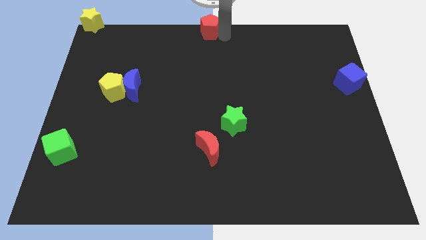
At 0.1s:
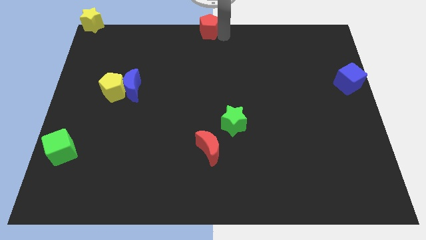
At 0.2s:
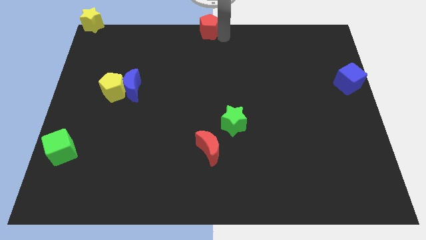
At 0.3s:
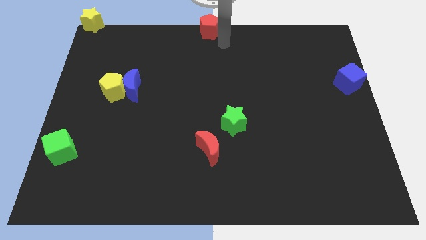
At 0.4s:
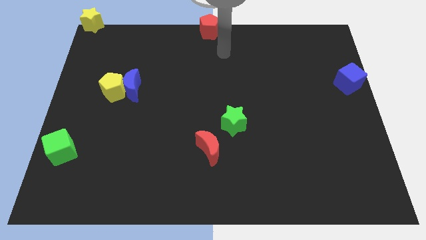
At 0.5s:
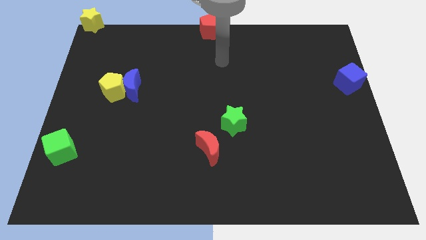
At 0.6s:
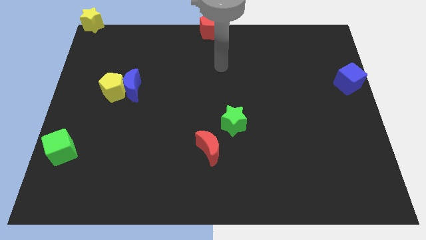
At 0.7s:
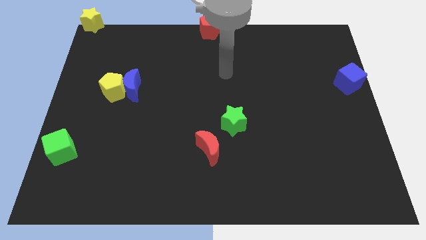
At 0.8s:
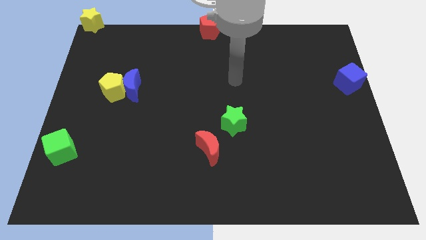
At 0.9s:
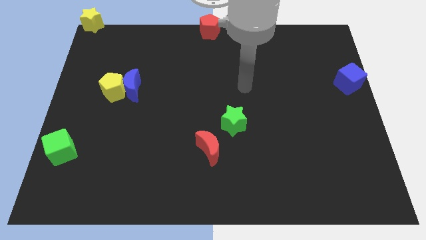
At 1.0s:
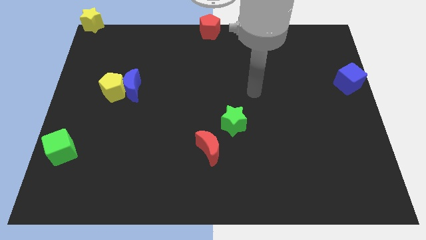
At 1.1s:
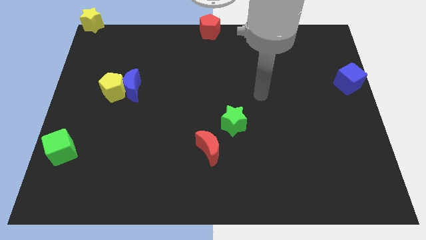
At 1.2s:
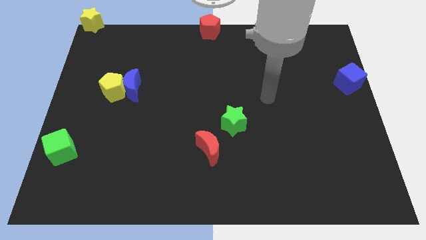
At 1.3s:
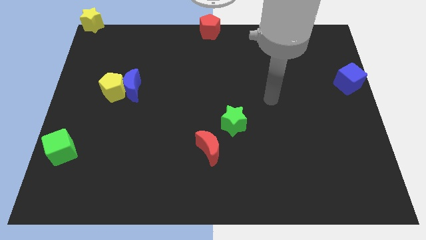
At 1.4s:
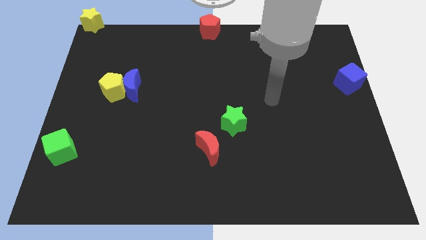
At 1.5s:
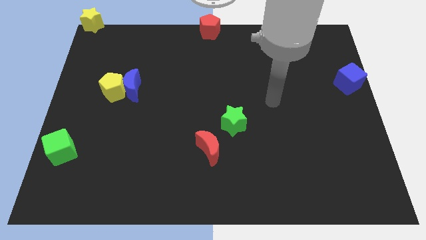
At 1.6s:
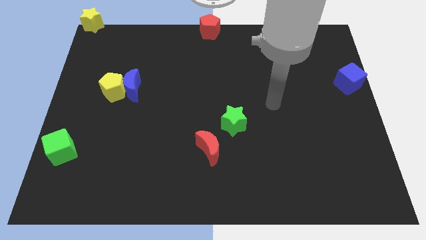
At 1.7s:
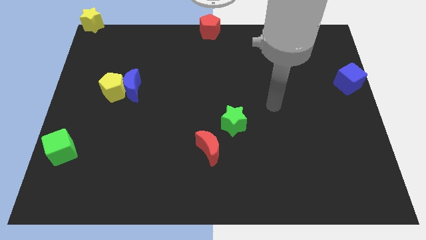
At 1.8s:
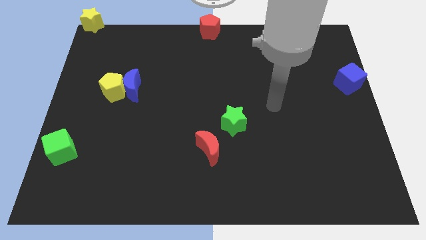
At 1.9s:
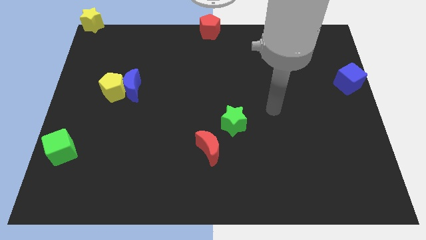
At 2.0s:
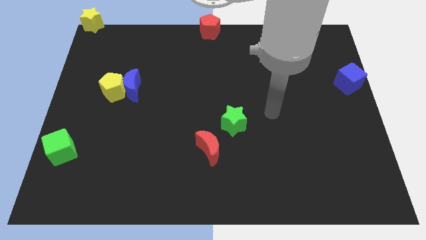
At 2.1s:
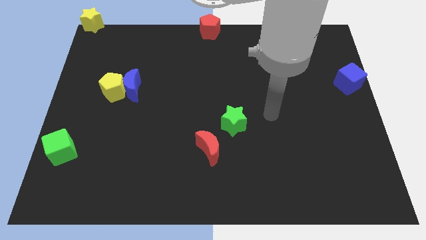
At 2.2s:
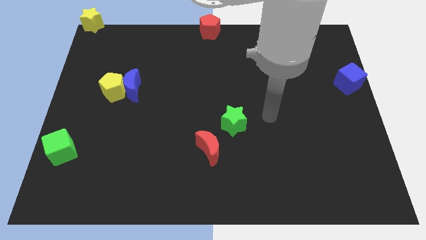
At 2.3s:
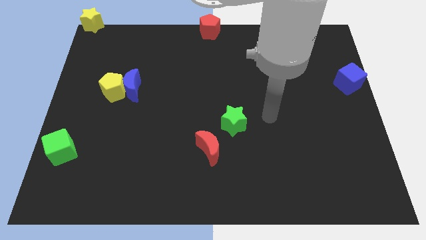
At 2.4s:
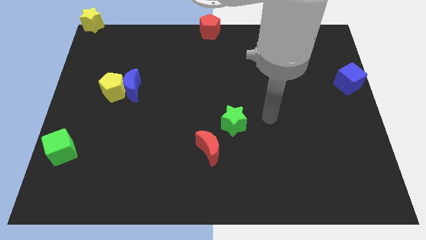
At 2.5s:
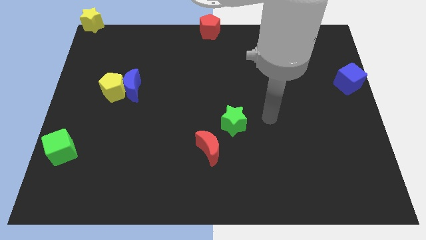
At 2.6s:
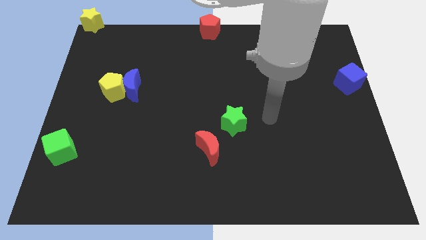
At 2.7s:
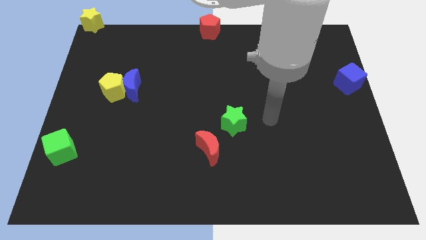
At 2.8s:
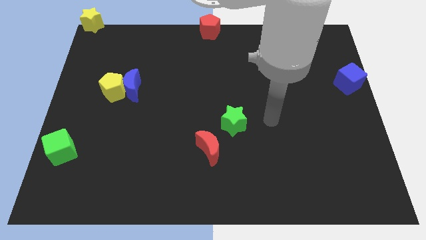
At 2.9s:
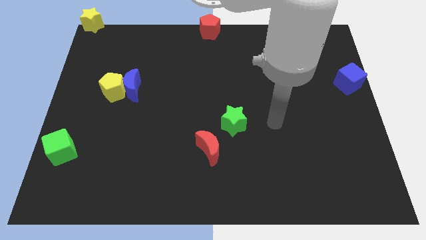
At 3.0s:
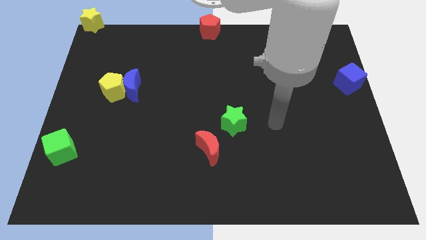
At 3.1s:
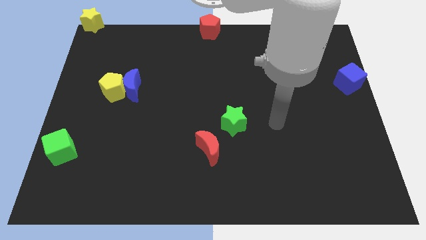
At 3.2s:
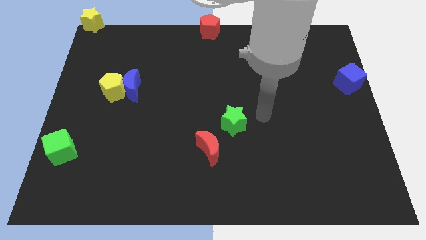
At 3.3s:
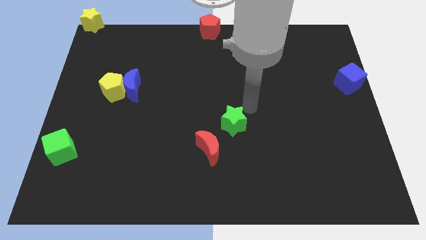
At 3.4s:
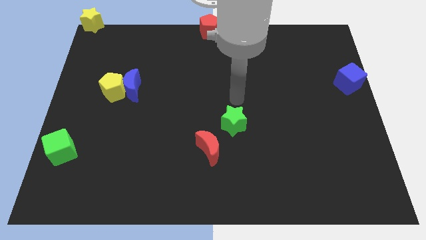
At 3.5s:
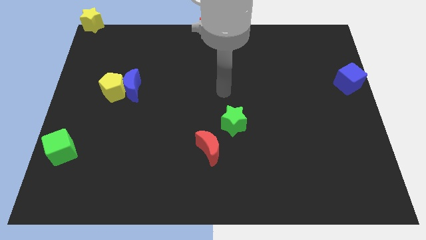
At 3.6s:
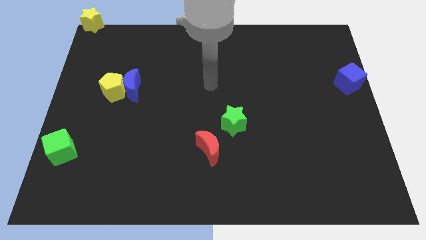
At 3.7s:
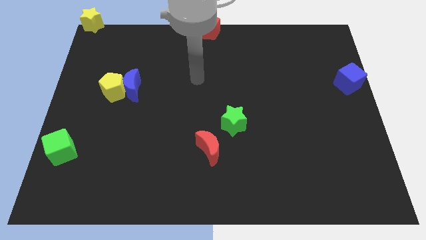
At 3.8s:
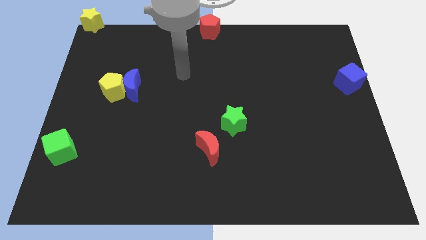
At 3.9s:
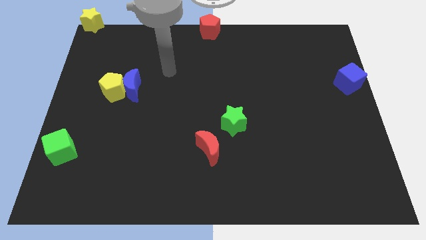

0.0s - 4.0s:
move the arm to the top of the yellow pentagon

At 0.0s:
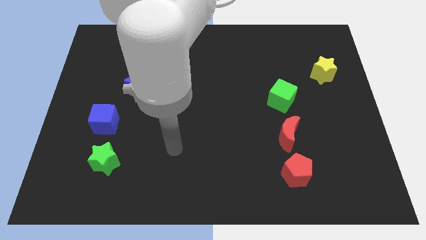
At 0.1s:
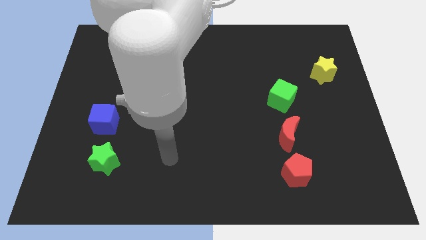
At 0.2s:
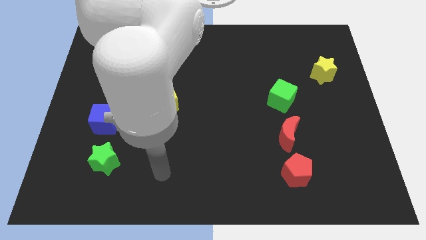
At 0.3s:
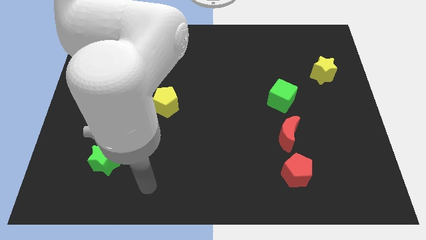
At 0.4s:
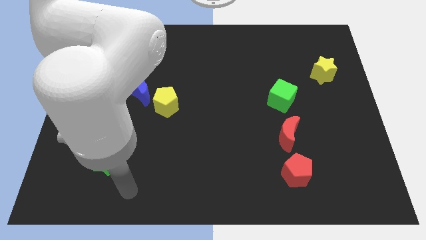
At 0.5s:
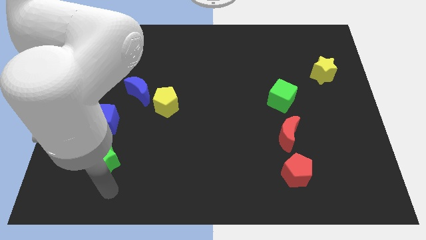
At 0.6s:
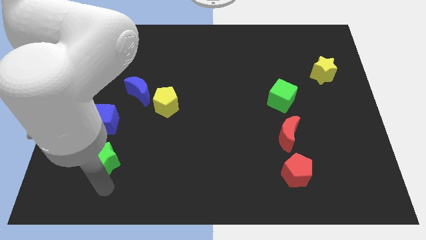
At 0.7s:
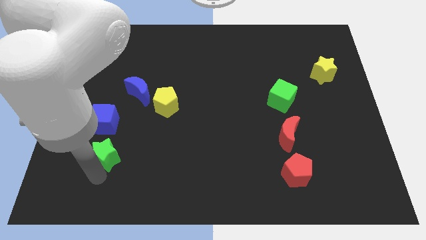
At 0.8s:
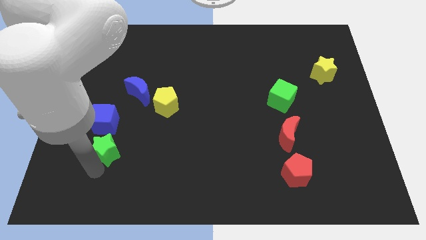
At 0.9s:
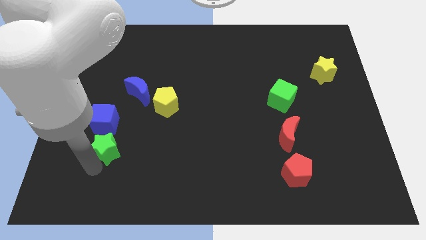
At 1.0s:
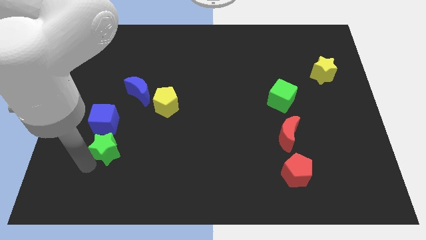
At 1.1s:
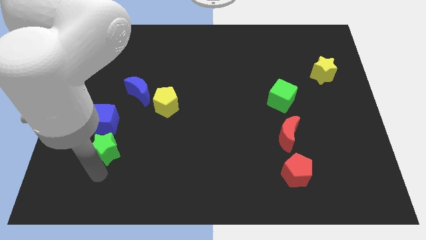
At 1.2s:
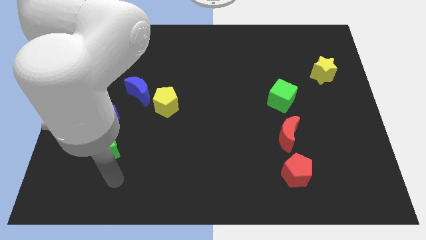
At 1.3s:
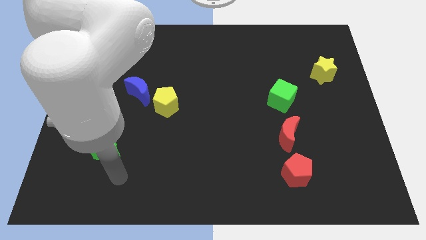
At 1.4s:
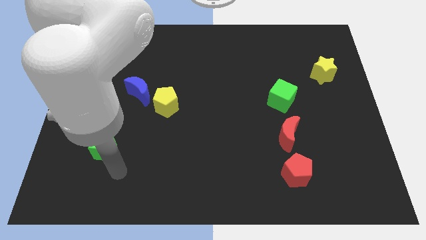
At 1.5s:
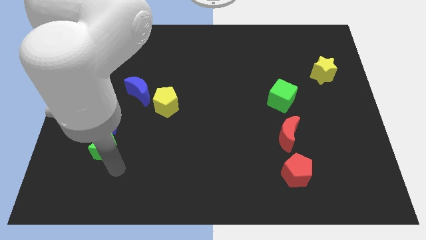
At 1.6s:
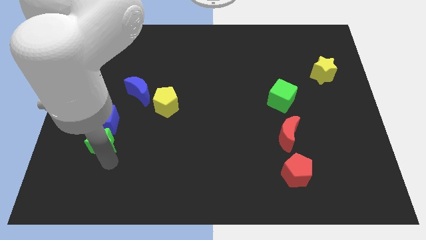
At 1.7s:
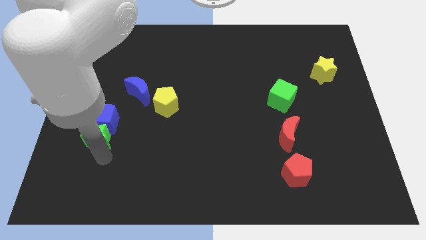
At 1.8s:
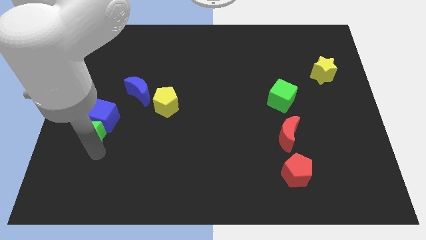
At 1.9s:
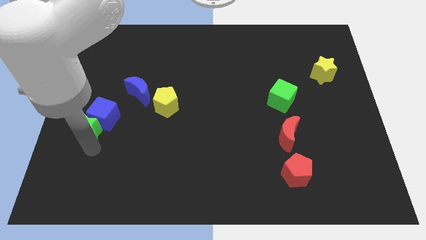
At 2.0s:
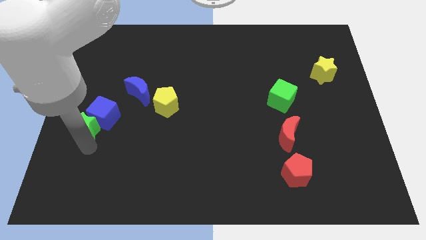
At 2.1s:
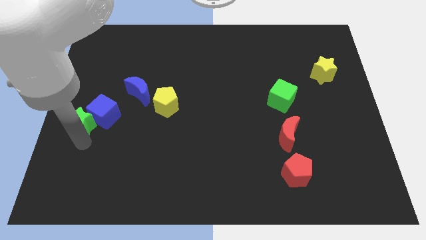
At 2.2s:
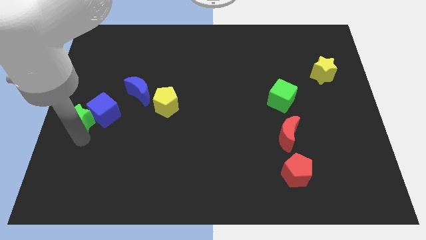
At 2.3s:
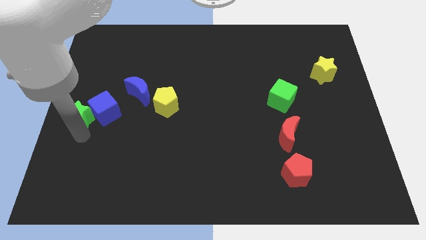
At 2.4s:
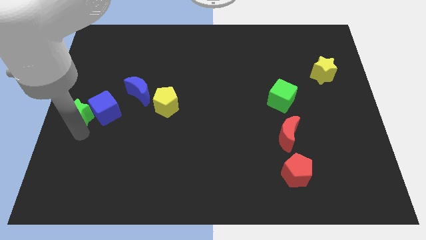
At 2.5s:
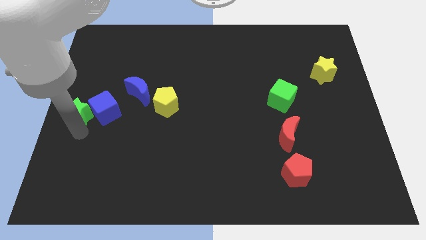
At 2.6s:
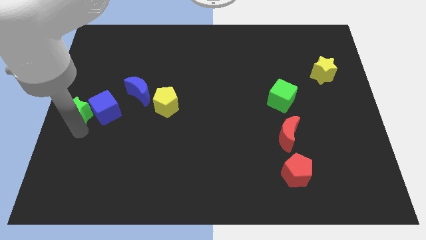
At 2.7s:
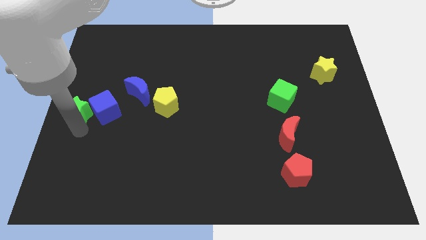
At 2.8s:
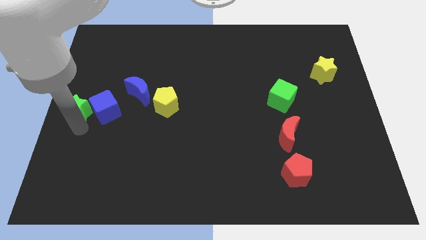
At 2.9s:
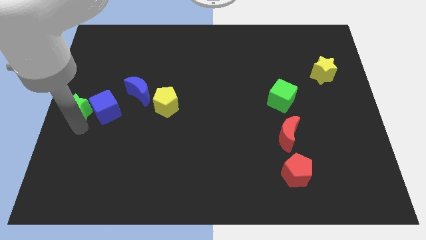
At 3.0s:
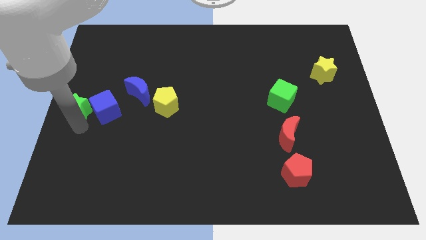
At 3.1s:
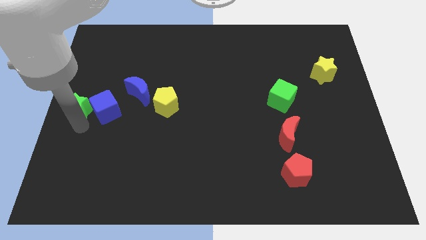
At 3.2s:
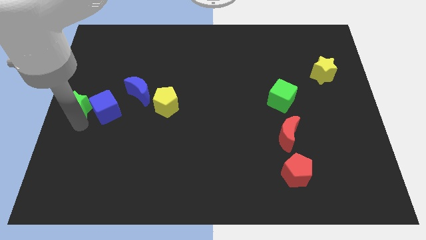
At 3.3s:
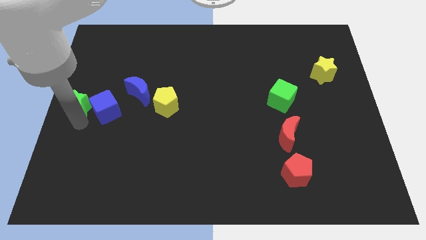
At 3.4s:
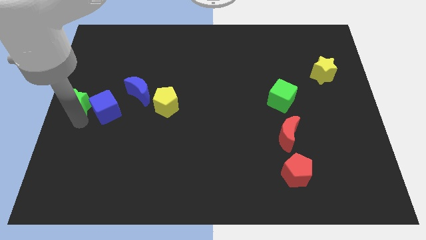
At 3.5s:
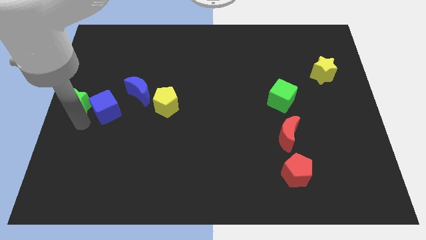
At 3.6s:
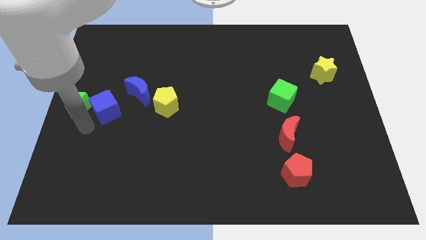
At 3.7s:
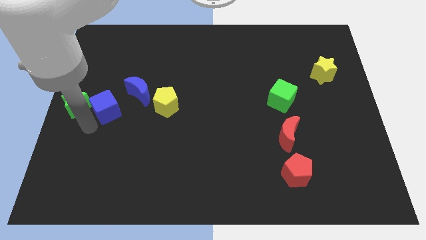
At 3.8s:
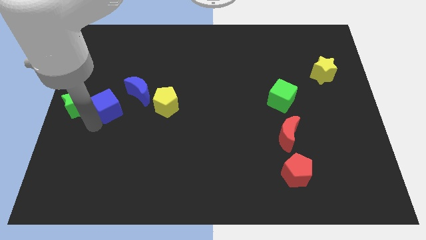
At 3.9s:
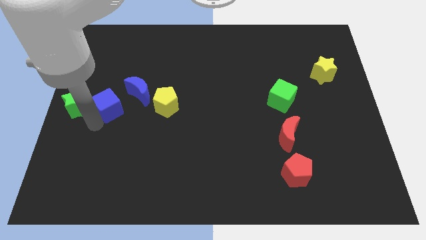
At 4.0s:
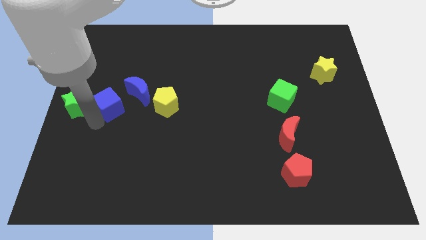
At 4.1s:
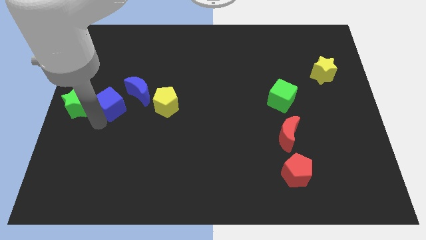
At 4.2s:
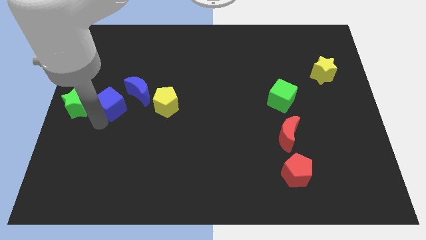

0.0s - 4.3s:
push the green star and blue cube upward

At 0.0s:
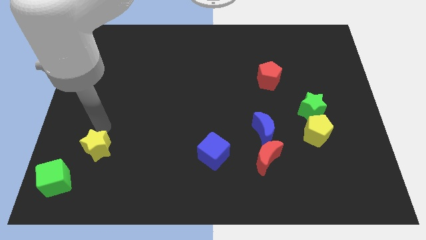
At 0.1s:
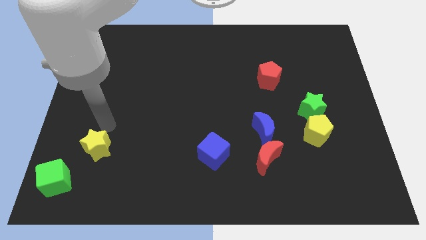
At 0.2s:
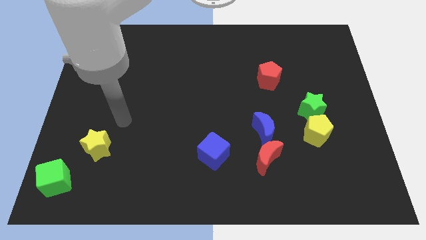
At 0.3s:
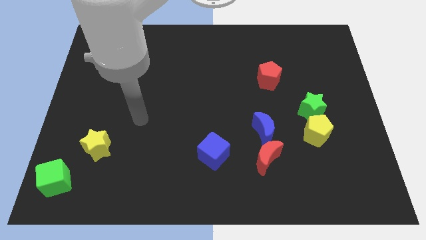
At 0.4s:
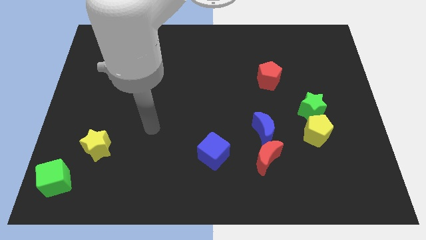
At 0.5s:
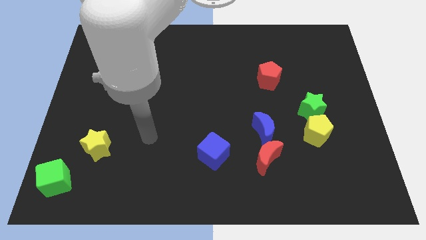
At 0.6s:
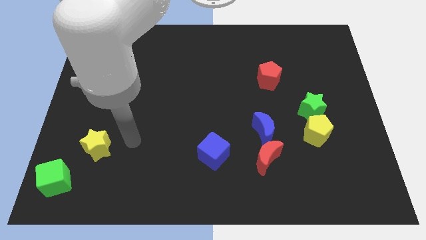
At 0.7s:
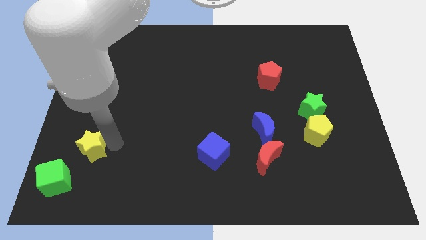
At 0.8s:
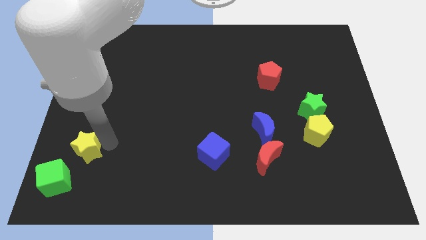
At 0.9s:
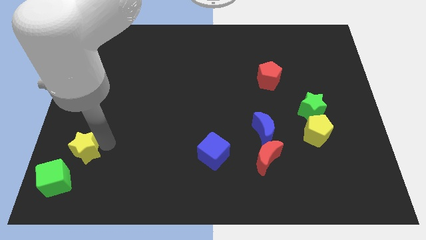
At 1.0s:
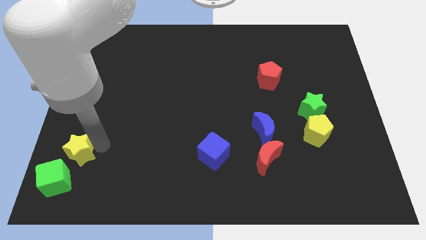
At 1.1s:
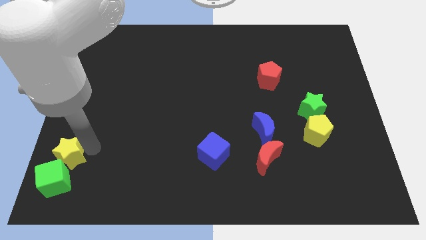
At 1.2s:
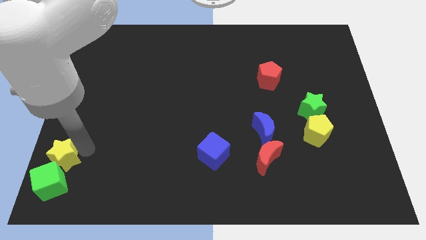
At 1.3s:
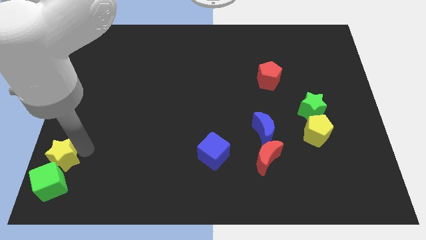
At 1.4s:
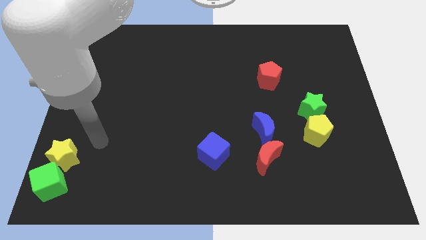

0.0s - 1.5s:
move yellow star into the green cube
